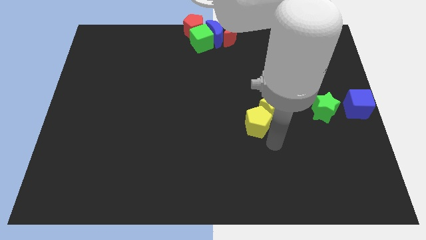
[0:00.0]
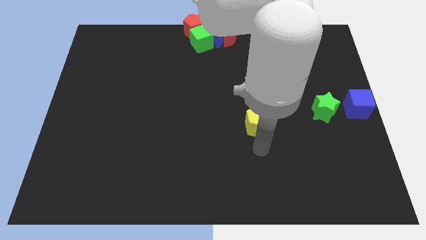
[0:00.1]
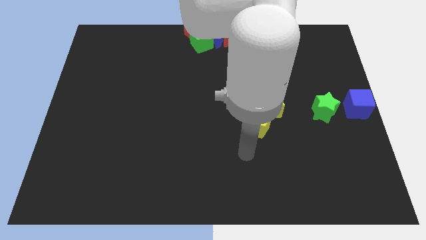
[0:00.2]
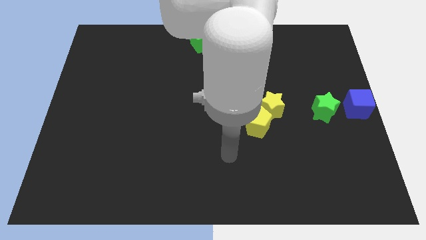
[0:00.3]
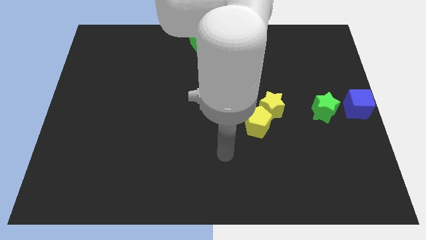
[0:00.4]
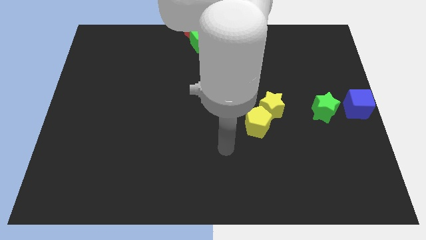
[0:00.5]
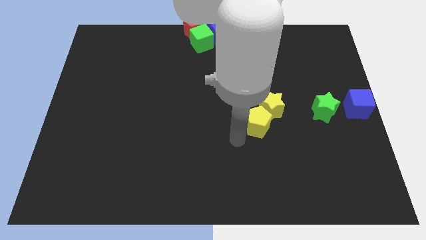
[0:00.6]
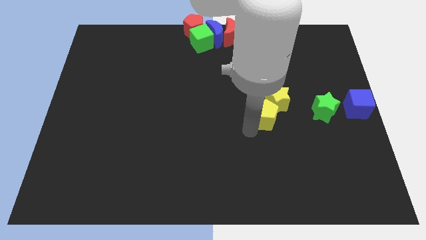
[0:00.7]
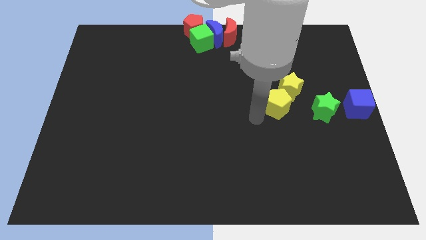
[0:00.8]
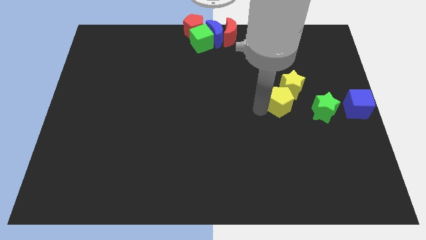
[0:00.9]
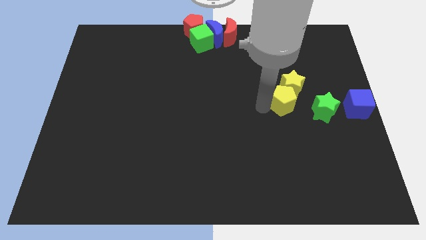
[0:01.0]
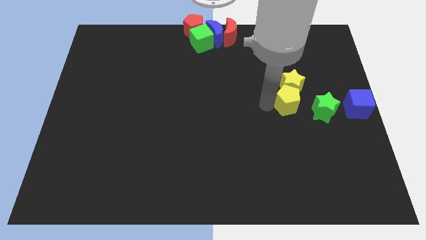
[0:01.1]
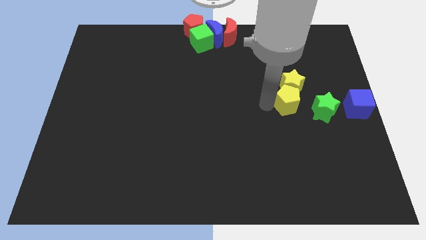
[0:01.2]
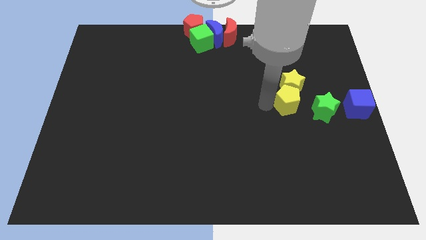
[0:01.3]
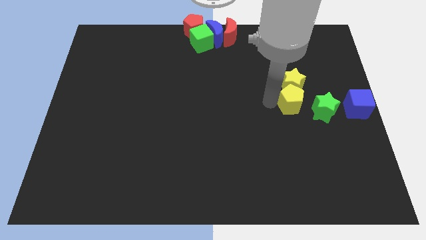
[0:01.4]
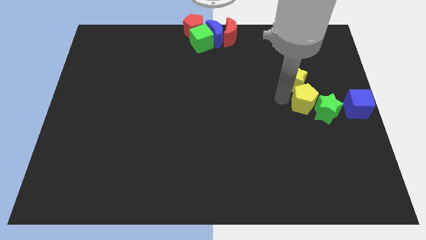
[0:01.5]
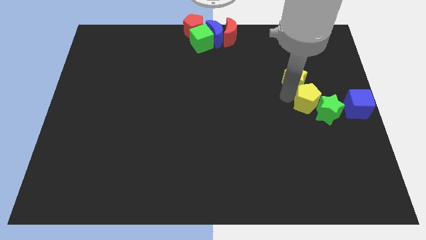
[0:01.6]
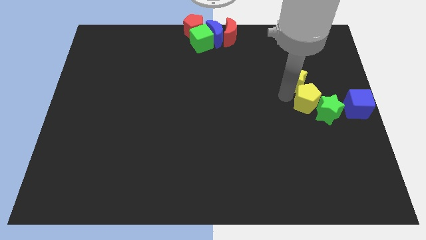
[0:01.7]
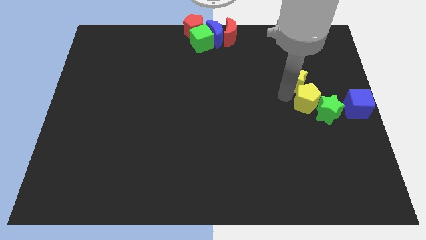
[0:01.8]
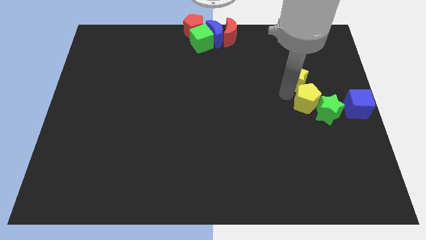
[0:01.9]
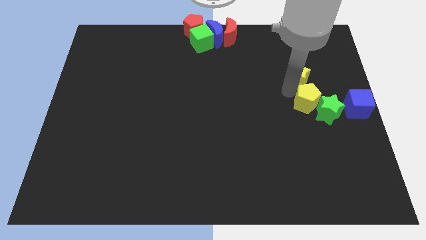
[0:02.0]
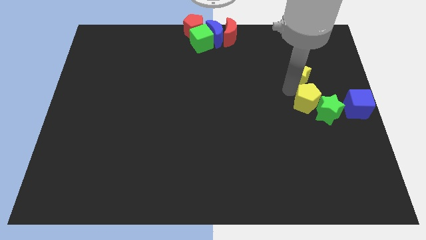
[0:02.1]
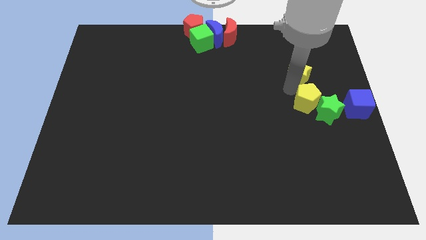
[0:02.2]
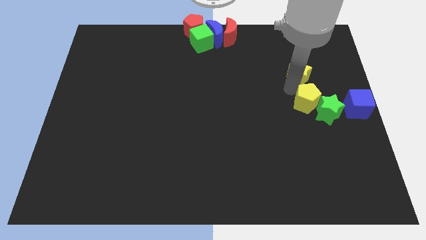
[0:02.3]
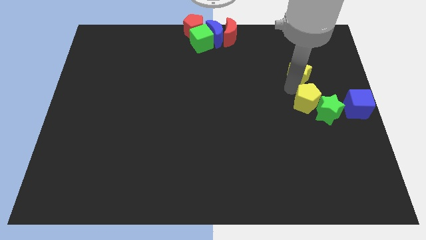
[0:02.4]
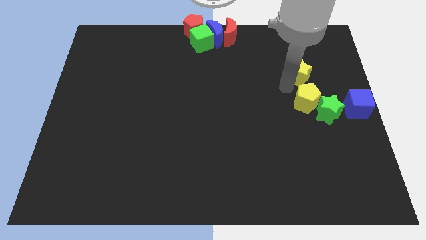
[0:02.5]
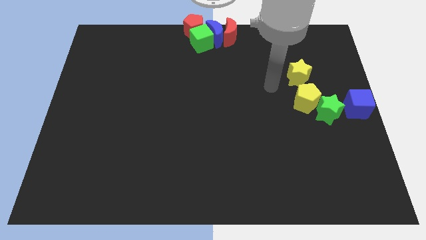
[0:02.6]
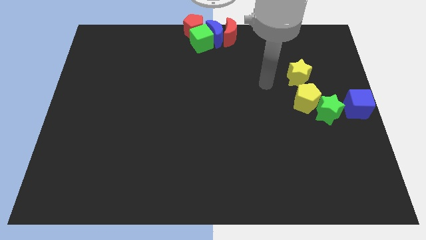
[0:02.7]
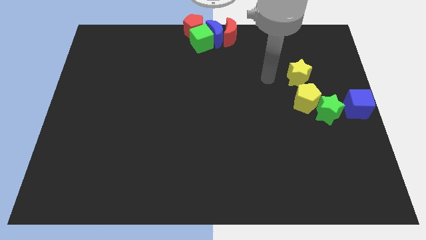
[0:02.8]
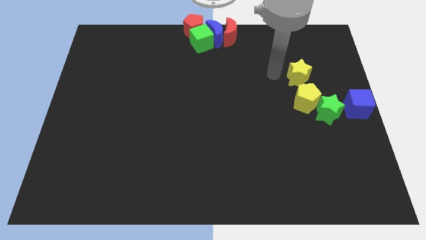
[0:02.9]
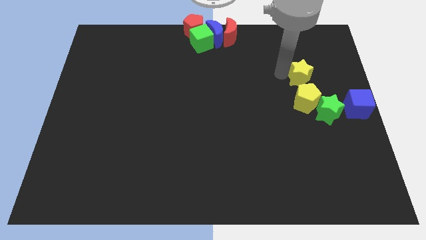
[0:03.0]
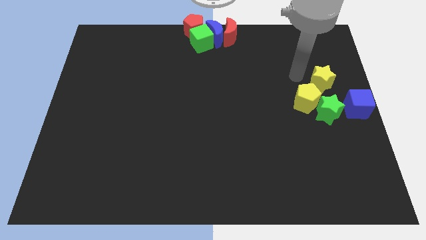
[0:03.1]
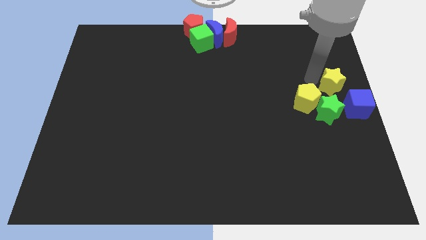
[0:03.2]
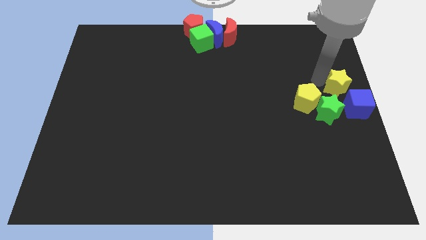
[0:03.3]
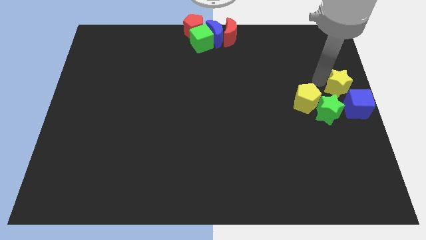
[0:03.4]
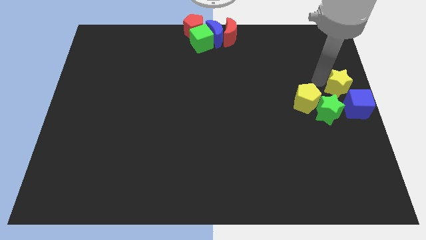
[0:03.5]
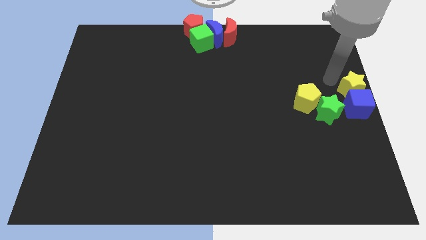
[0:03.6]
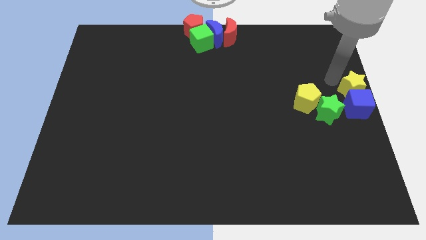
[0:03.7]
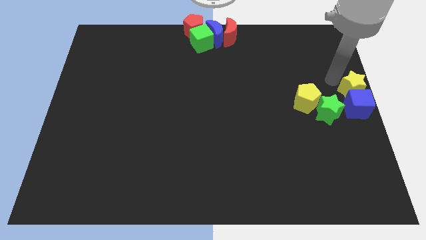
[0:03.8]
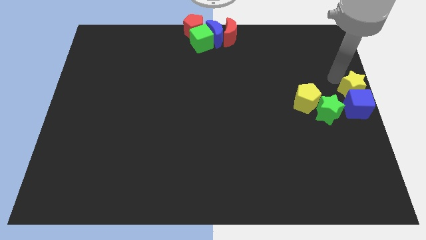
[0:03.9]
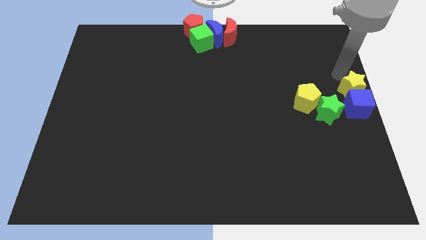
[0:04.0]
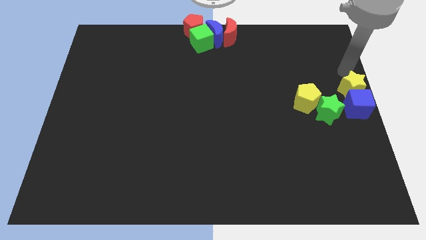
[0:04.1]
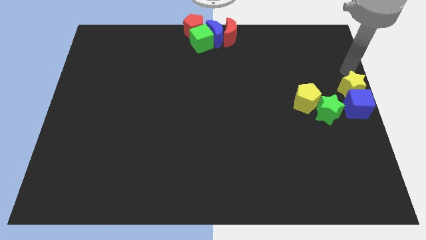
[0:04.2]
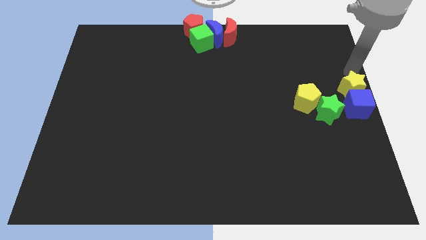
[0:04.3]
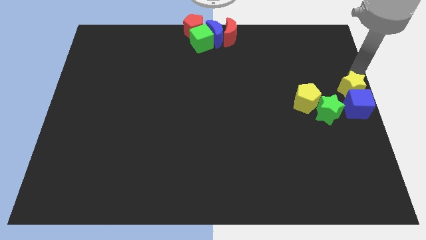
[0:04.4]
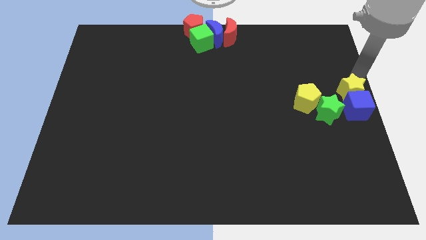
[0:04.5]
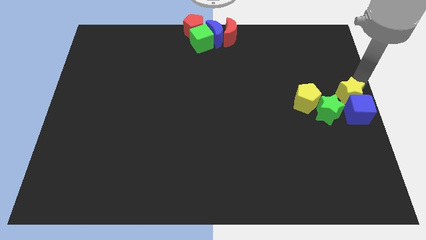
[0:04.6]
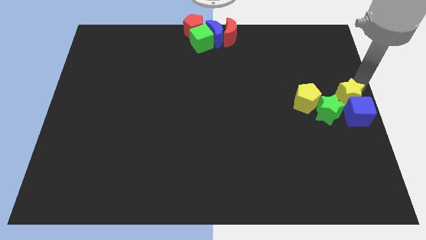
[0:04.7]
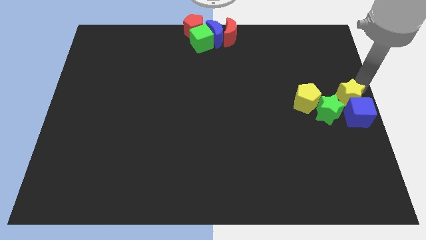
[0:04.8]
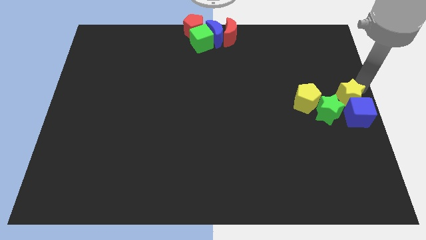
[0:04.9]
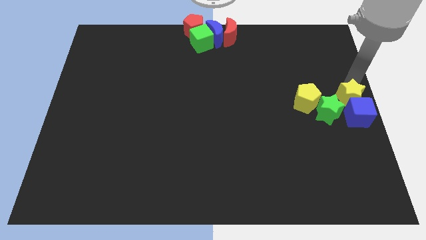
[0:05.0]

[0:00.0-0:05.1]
push the yellow star into the blue cube

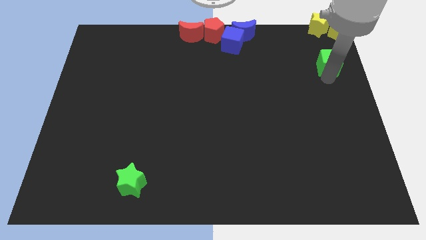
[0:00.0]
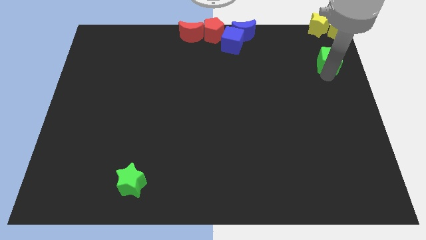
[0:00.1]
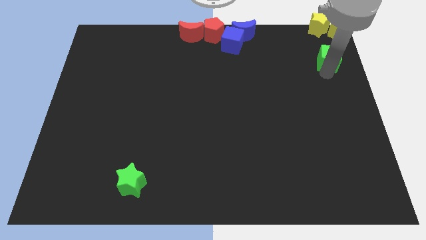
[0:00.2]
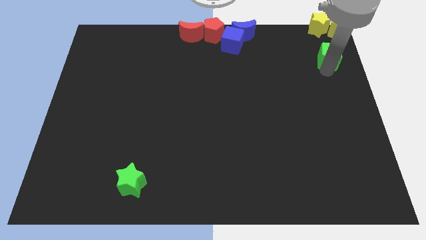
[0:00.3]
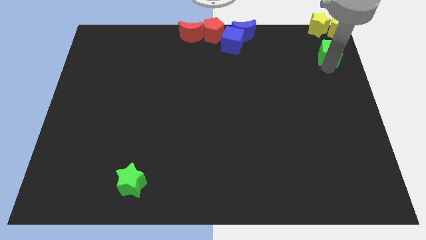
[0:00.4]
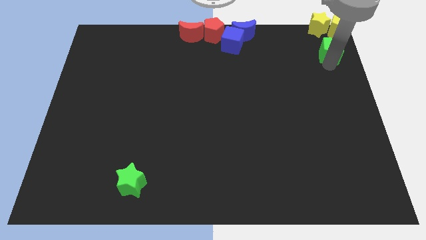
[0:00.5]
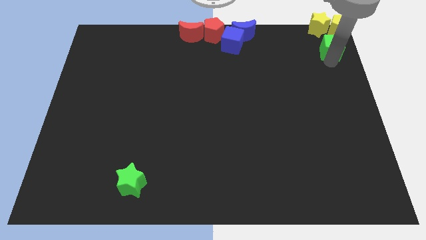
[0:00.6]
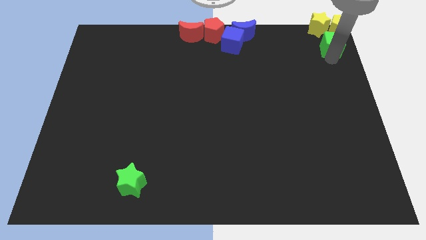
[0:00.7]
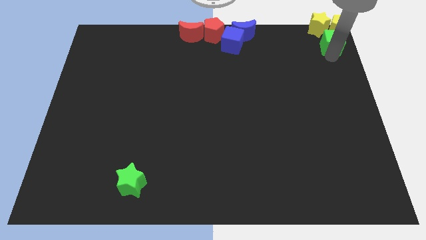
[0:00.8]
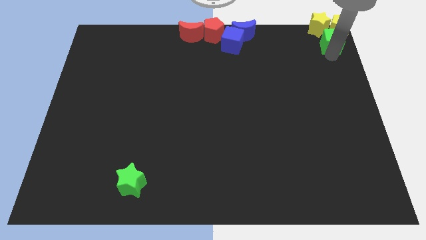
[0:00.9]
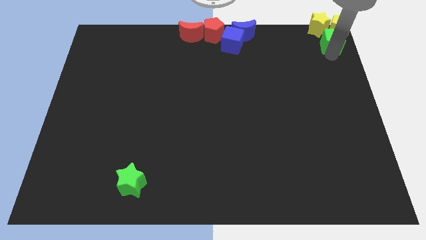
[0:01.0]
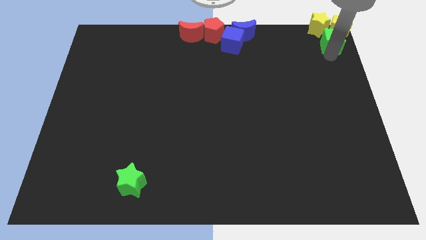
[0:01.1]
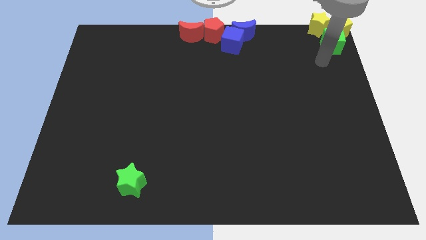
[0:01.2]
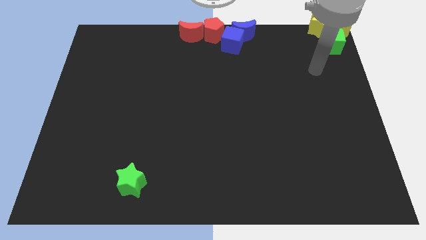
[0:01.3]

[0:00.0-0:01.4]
move the green cube close to the yellow pentagon

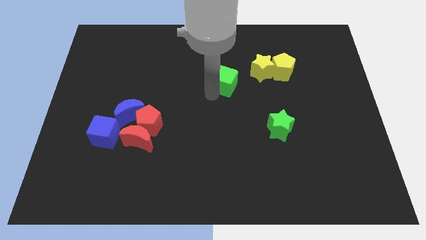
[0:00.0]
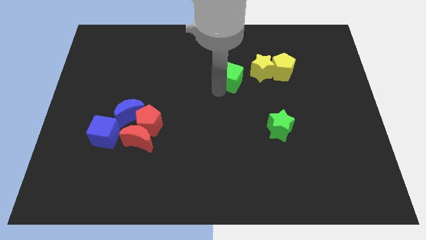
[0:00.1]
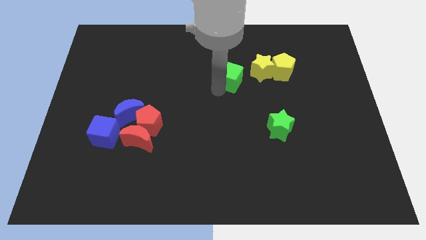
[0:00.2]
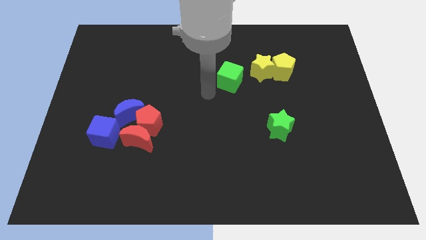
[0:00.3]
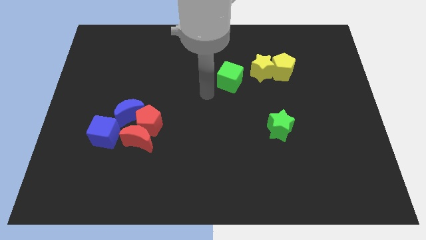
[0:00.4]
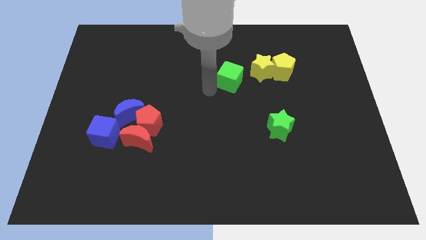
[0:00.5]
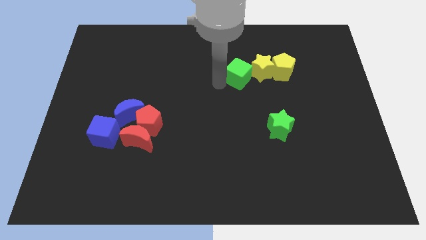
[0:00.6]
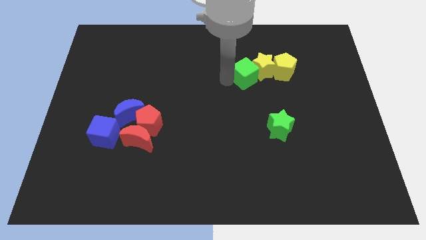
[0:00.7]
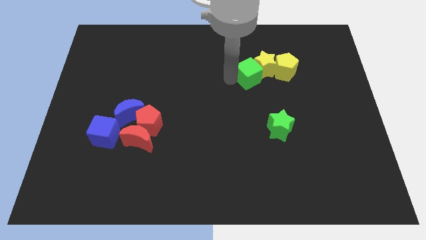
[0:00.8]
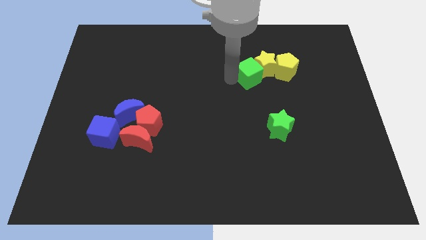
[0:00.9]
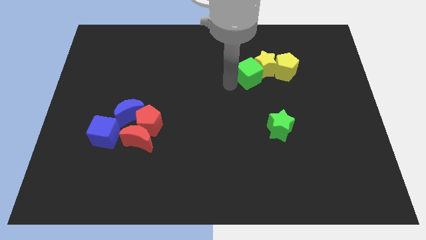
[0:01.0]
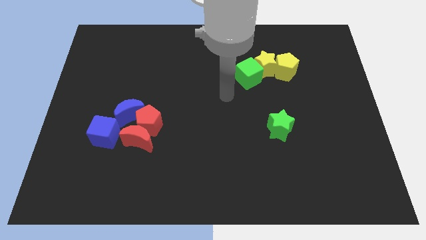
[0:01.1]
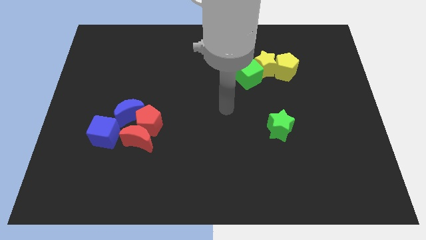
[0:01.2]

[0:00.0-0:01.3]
move the green cube into the yellow blocks

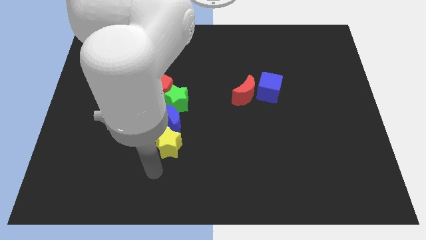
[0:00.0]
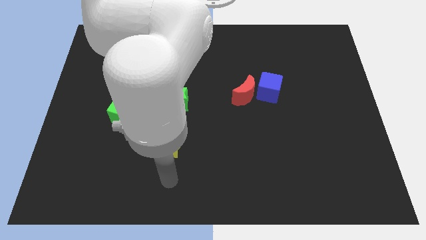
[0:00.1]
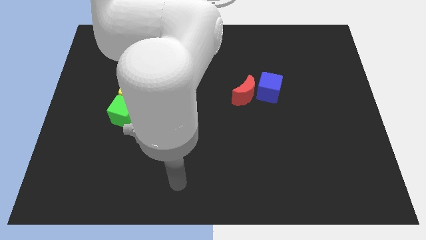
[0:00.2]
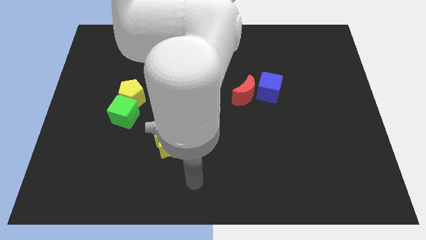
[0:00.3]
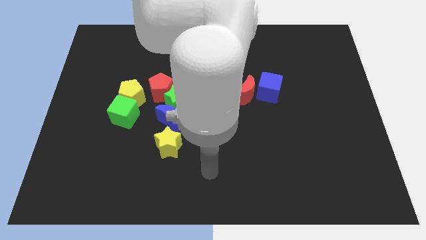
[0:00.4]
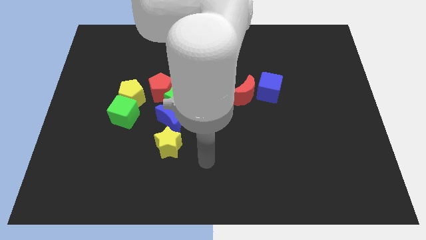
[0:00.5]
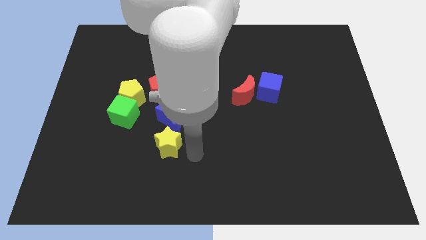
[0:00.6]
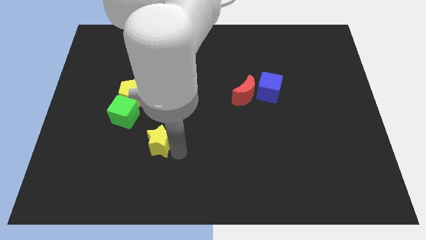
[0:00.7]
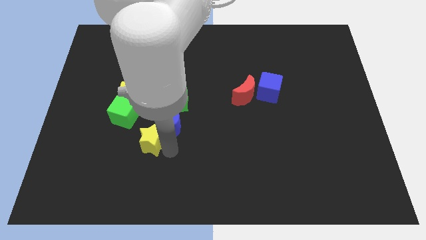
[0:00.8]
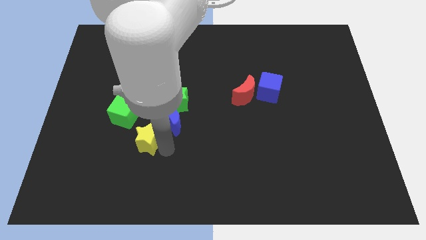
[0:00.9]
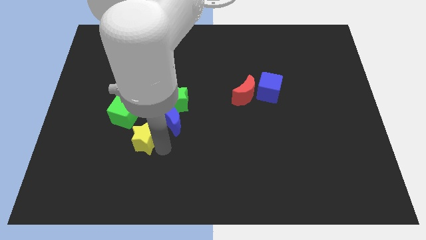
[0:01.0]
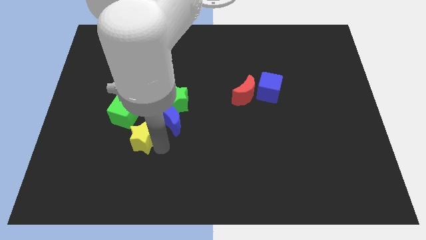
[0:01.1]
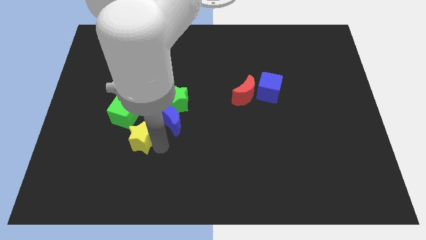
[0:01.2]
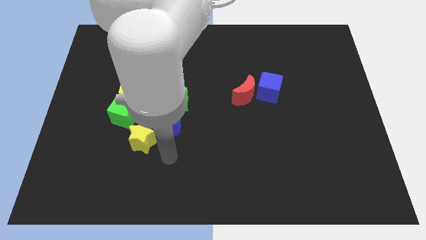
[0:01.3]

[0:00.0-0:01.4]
slightly move the yellow star towards the left
